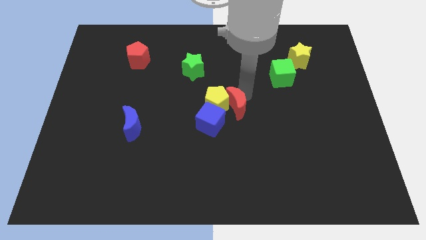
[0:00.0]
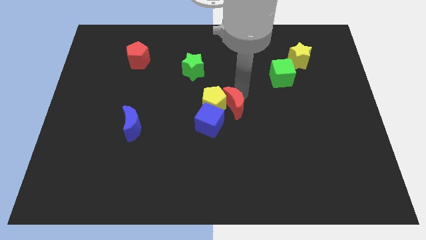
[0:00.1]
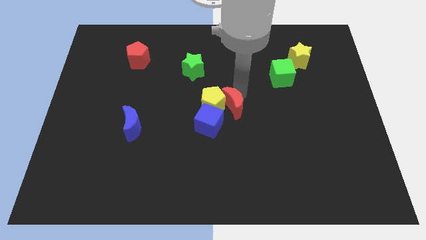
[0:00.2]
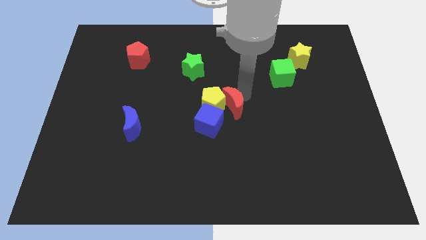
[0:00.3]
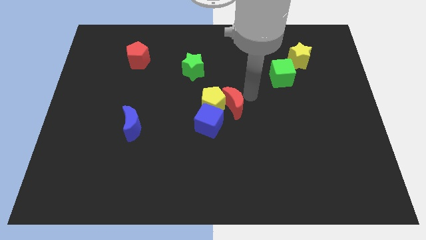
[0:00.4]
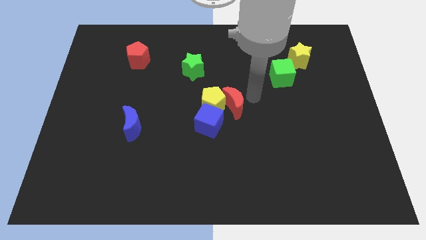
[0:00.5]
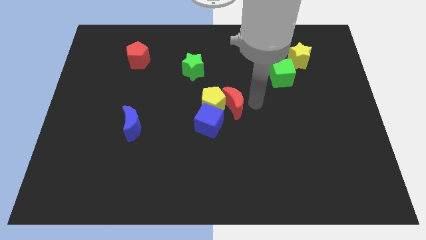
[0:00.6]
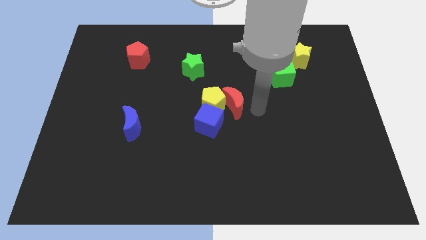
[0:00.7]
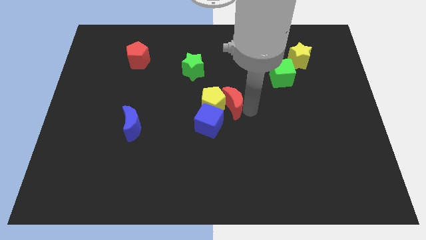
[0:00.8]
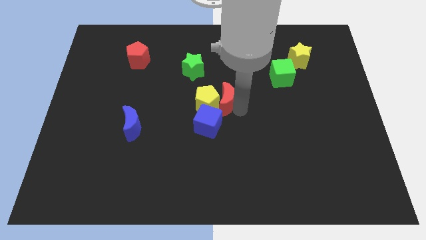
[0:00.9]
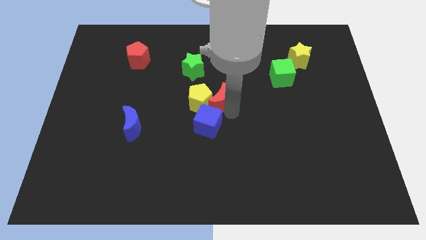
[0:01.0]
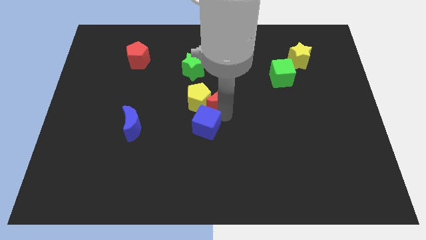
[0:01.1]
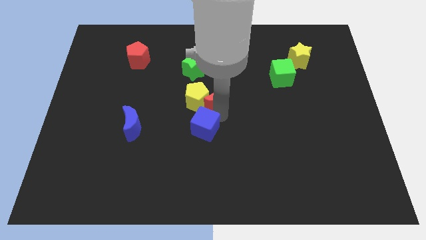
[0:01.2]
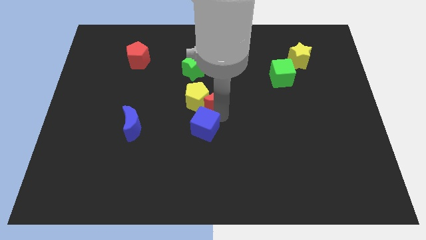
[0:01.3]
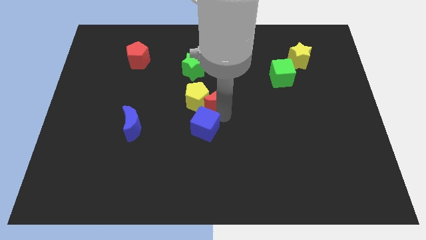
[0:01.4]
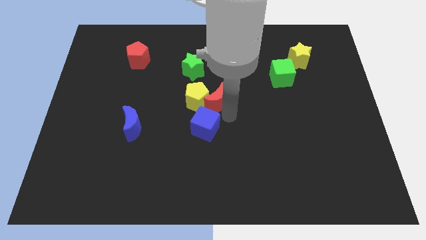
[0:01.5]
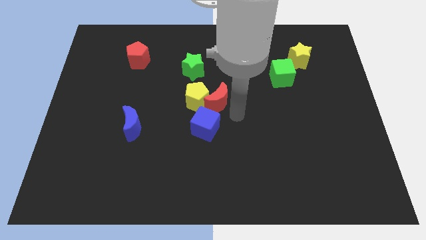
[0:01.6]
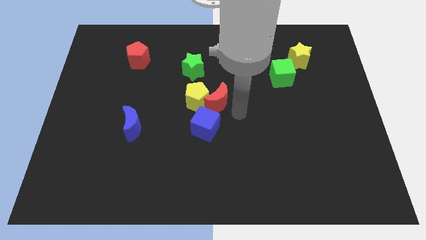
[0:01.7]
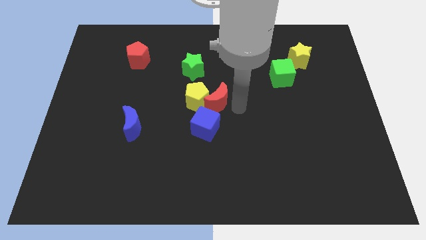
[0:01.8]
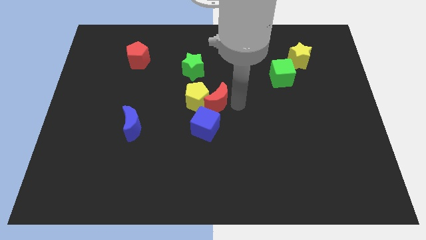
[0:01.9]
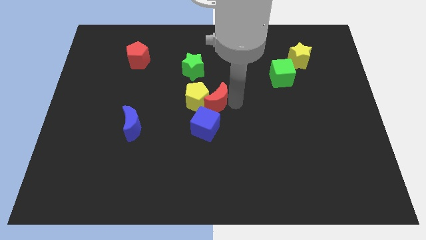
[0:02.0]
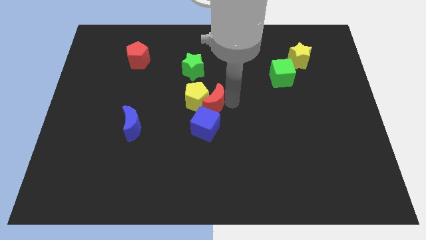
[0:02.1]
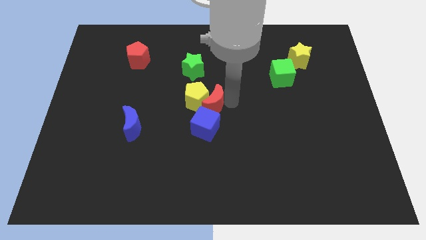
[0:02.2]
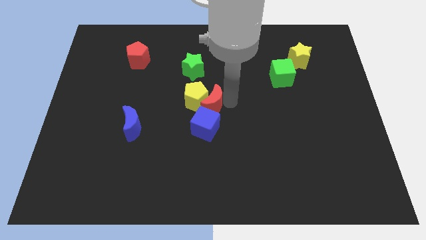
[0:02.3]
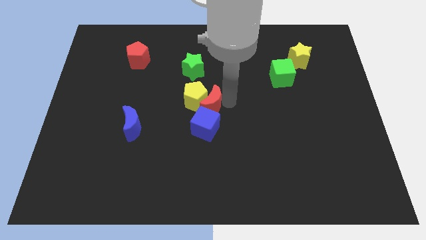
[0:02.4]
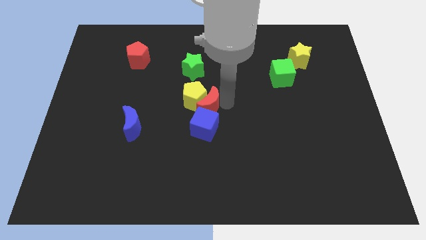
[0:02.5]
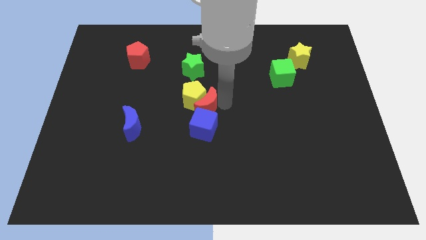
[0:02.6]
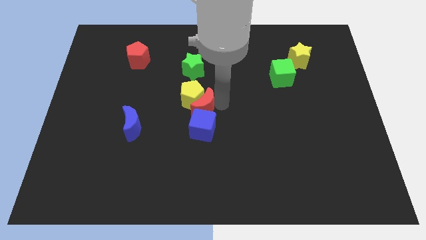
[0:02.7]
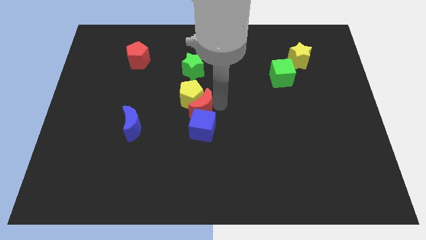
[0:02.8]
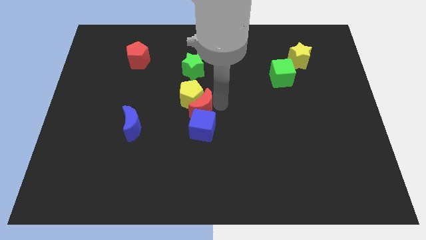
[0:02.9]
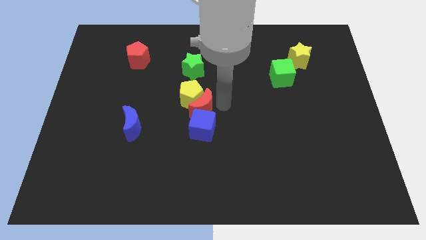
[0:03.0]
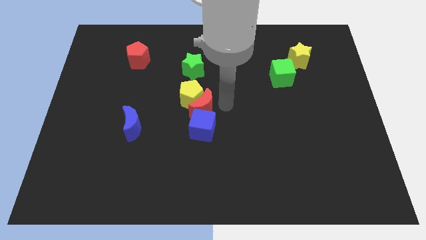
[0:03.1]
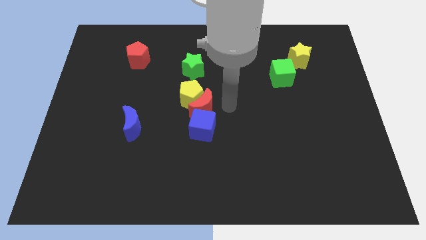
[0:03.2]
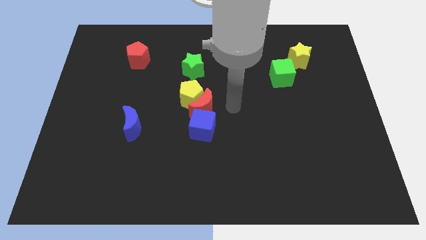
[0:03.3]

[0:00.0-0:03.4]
make a vertical line with blue cube red crescent and yellow pentagon

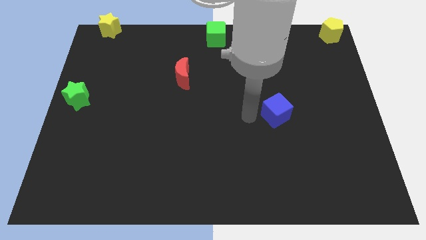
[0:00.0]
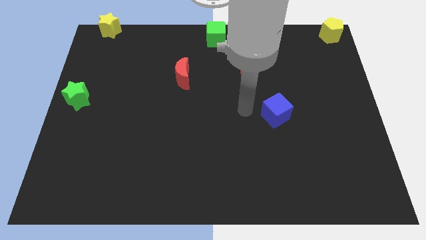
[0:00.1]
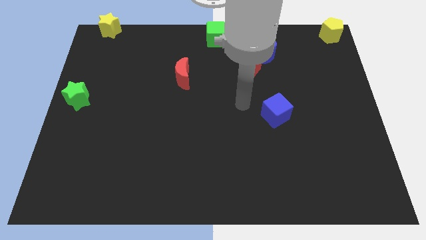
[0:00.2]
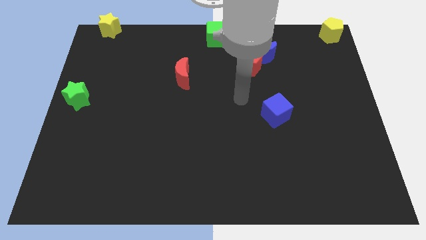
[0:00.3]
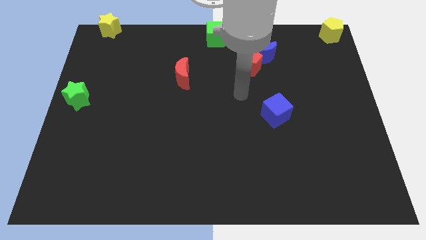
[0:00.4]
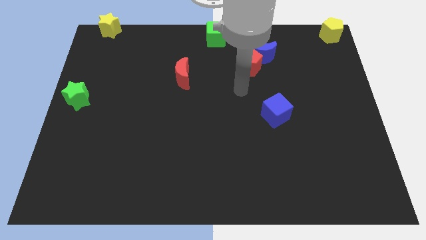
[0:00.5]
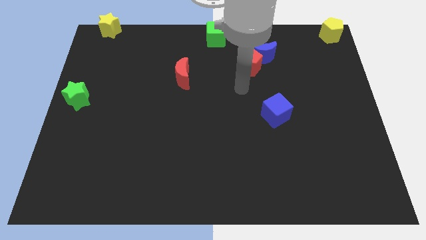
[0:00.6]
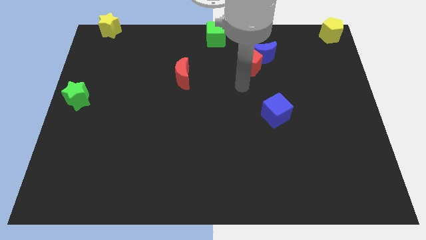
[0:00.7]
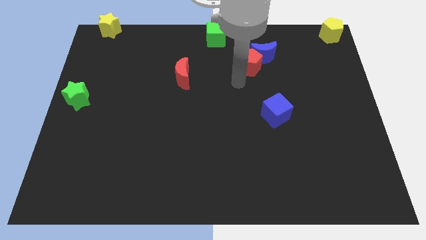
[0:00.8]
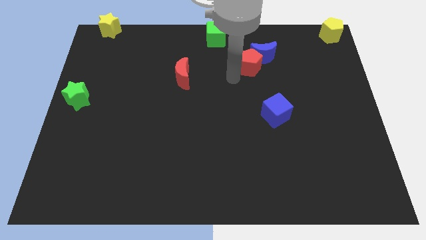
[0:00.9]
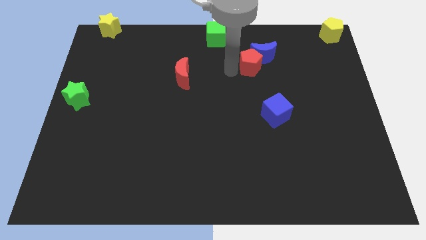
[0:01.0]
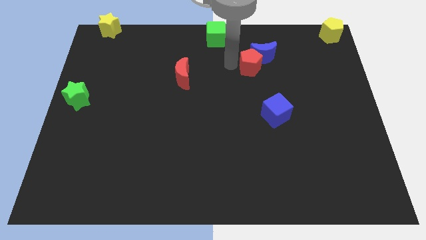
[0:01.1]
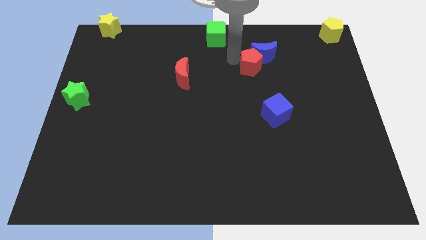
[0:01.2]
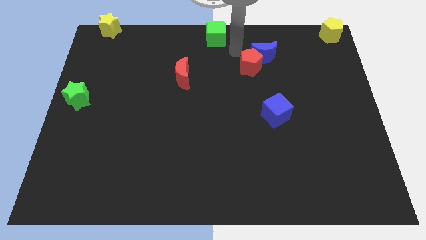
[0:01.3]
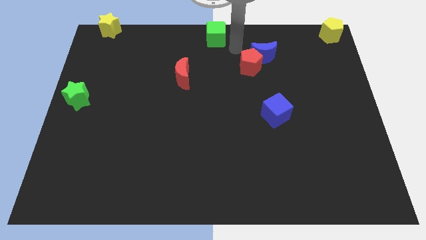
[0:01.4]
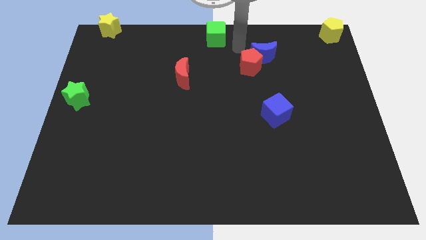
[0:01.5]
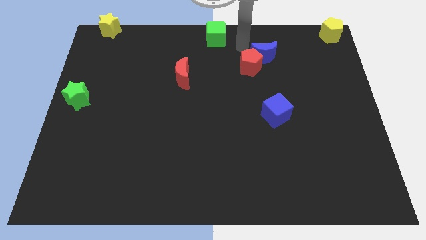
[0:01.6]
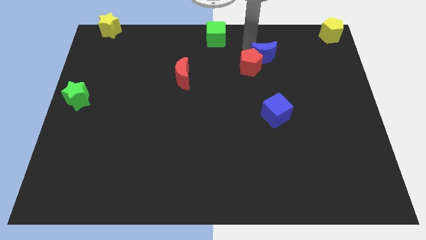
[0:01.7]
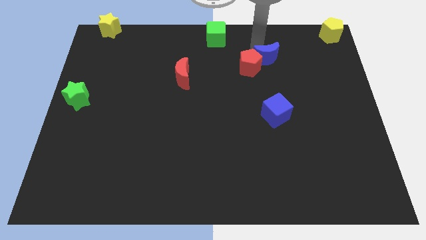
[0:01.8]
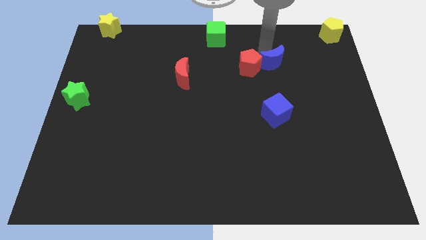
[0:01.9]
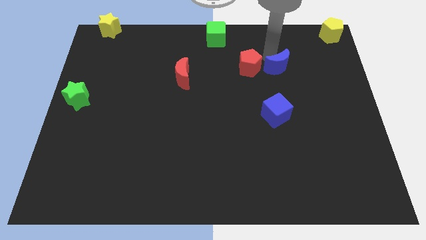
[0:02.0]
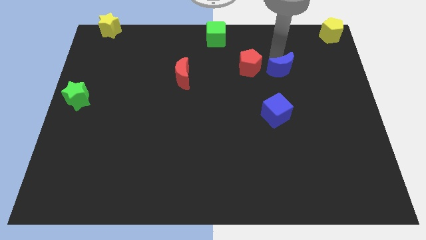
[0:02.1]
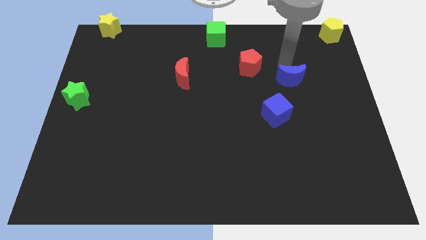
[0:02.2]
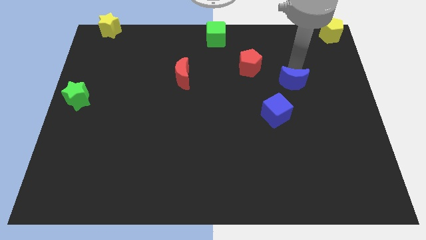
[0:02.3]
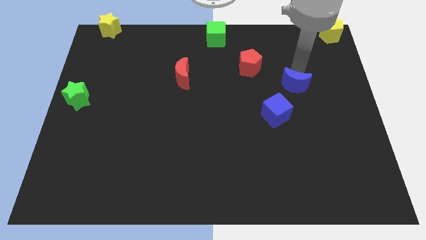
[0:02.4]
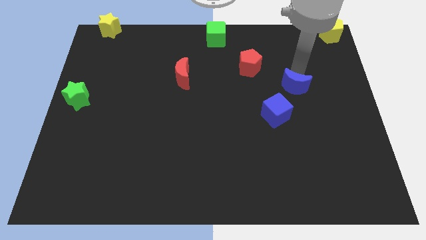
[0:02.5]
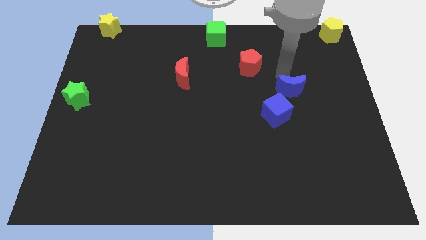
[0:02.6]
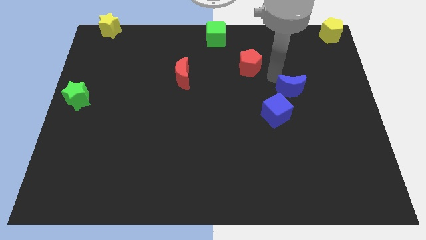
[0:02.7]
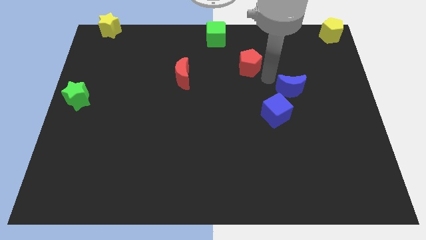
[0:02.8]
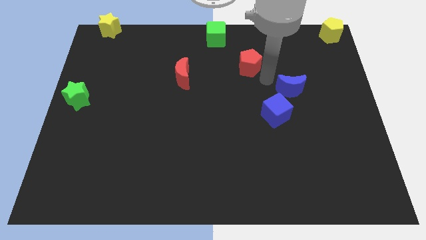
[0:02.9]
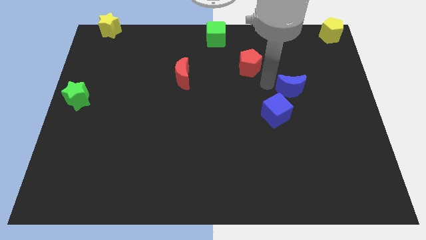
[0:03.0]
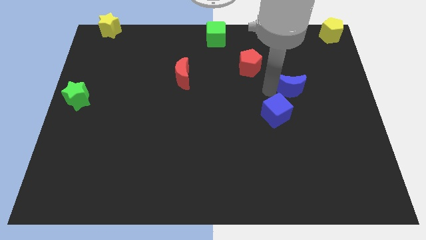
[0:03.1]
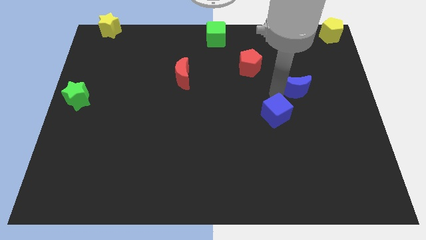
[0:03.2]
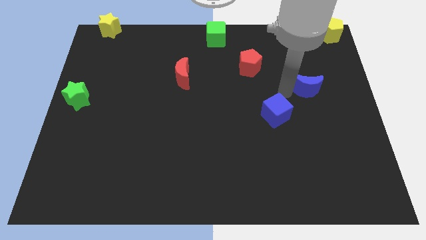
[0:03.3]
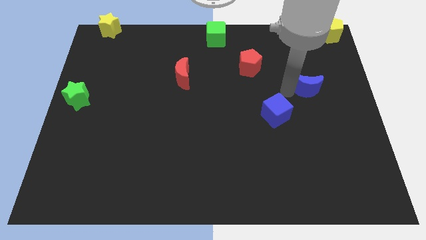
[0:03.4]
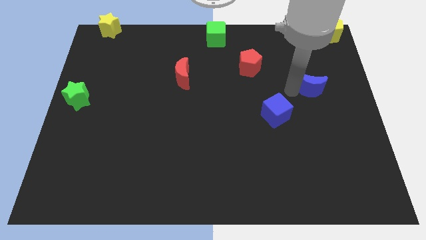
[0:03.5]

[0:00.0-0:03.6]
put the blue moon diagonally on the top right side of the blue cube

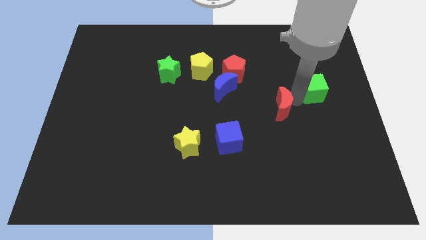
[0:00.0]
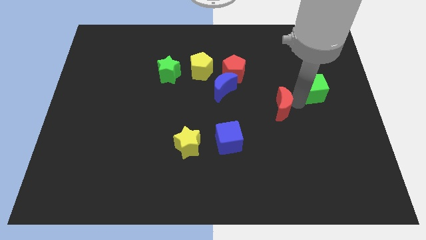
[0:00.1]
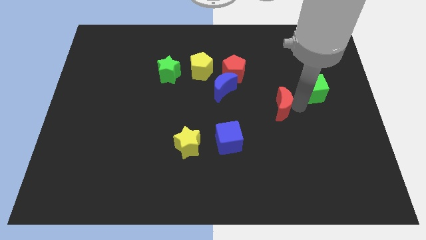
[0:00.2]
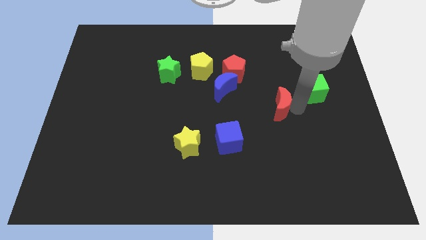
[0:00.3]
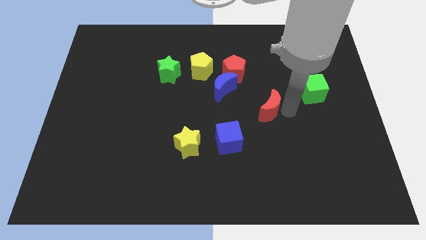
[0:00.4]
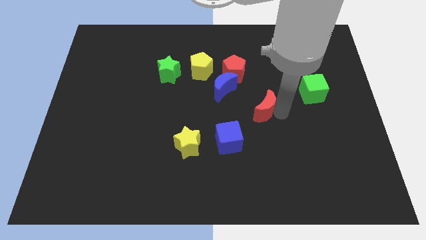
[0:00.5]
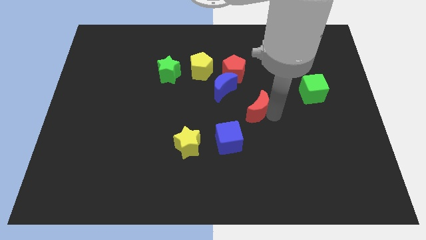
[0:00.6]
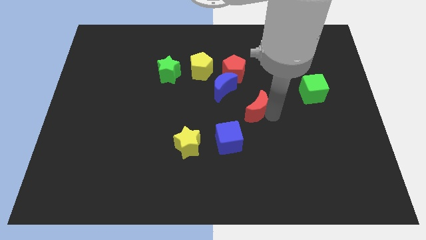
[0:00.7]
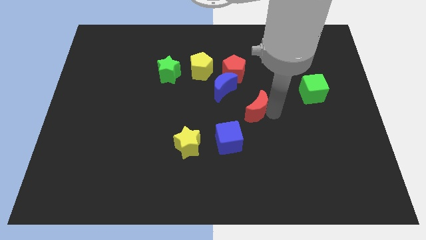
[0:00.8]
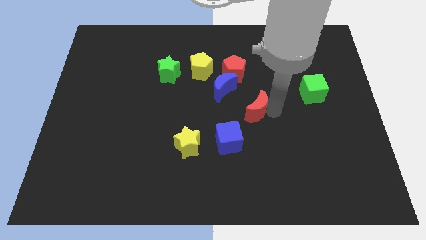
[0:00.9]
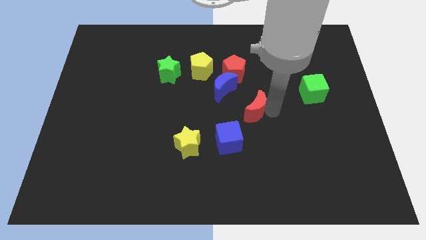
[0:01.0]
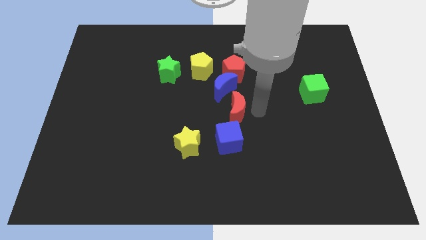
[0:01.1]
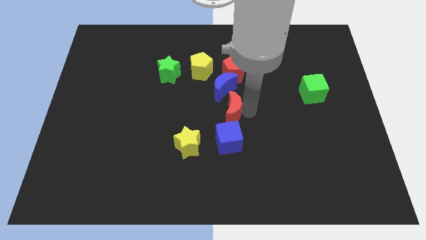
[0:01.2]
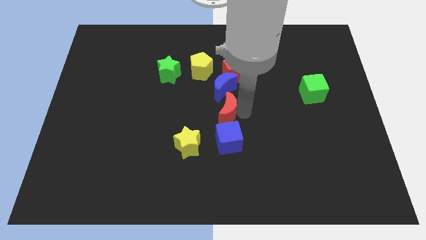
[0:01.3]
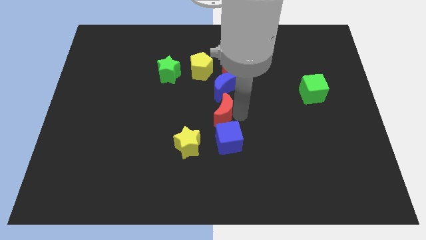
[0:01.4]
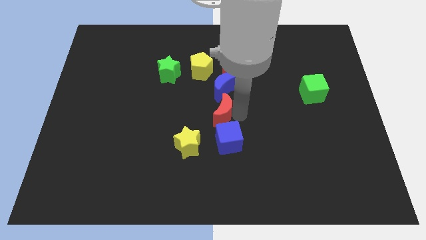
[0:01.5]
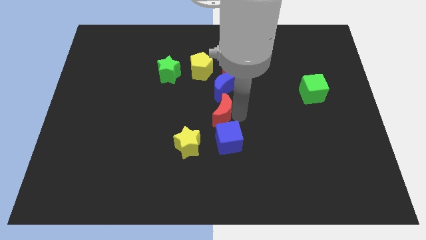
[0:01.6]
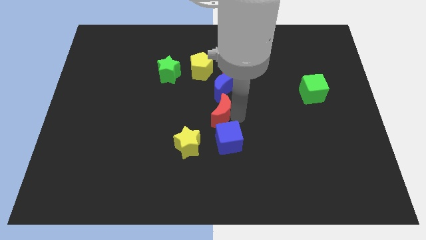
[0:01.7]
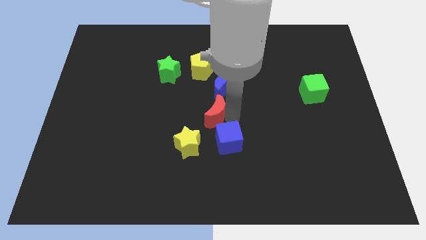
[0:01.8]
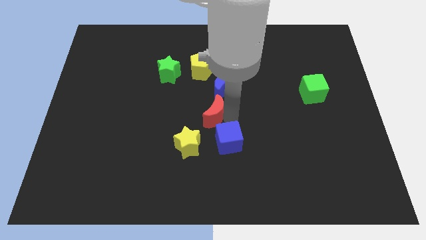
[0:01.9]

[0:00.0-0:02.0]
push the red crescent to the center of the board
